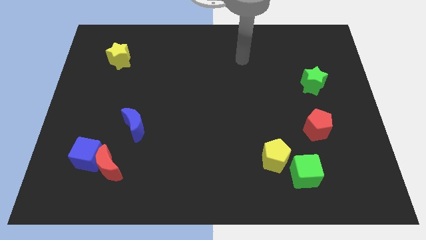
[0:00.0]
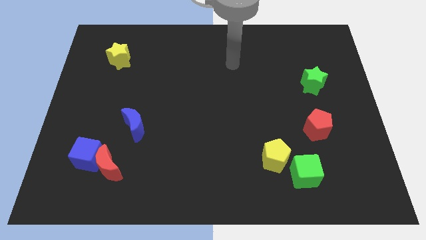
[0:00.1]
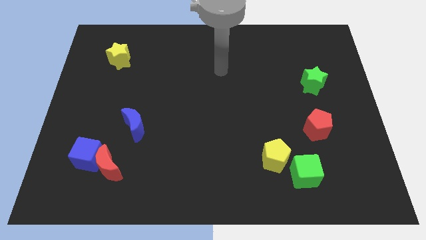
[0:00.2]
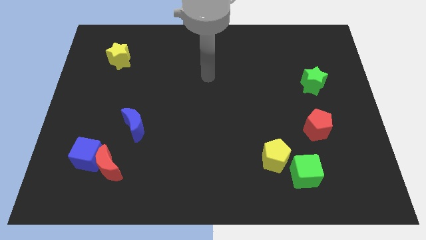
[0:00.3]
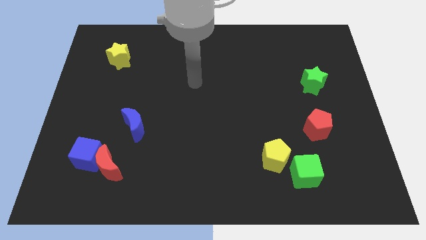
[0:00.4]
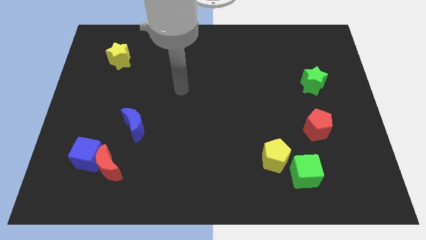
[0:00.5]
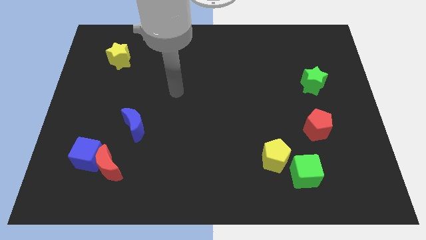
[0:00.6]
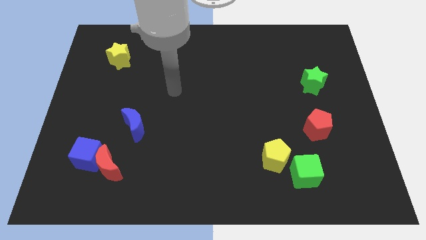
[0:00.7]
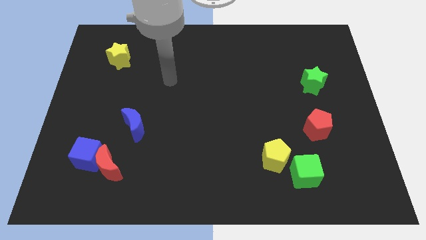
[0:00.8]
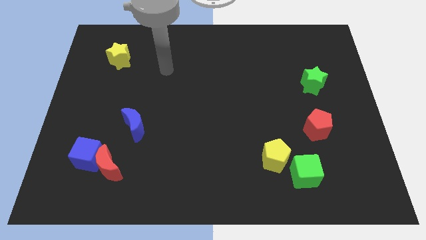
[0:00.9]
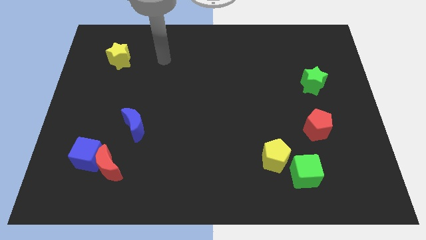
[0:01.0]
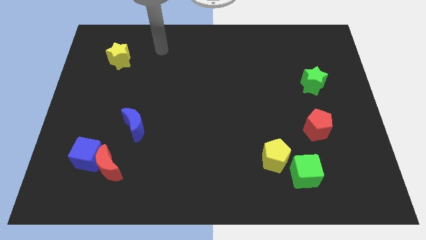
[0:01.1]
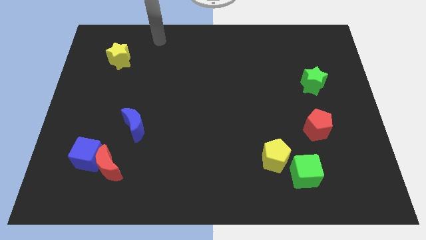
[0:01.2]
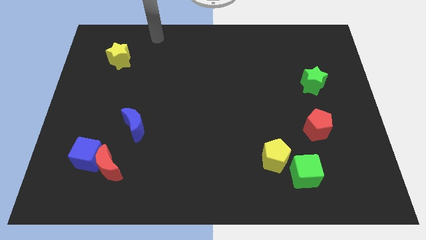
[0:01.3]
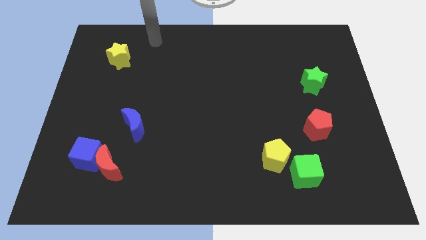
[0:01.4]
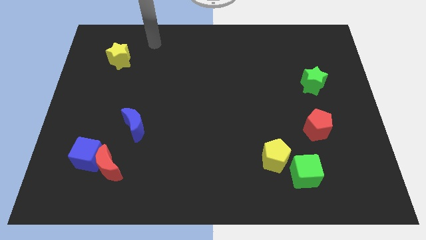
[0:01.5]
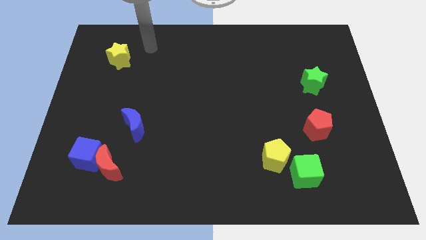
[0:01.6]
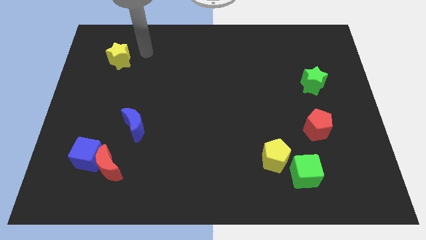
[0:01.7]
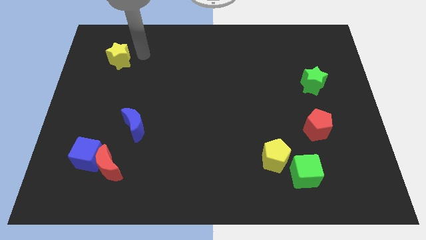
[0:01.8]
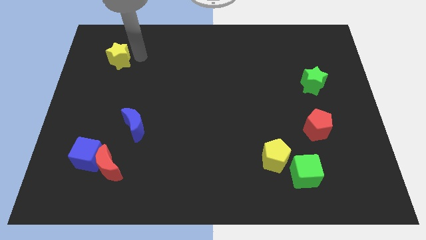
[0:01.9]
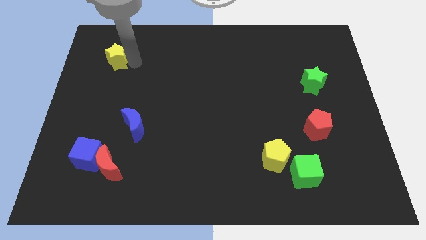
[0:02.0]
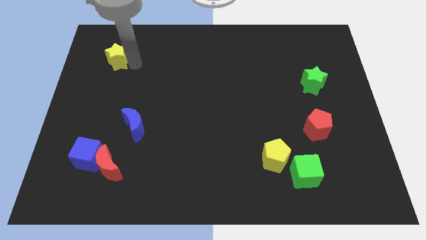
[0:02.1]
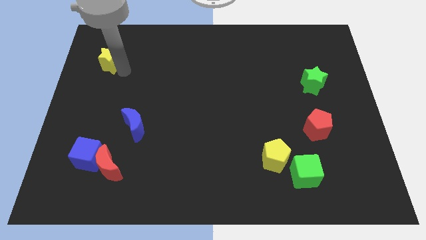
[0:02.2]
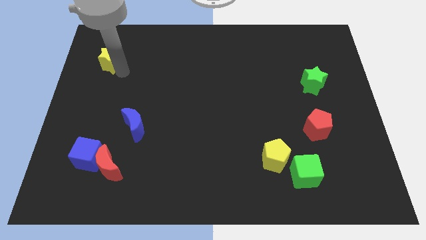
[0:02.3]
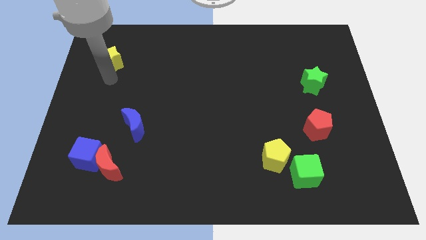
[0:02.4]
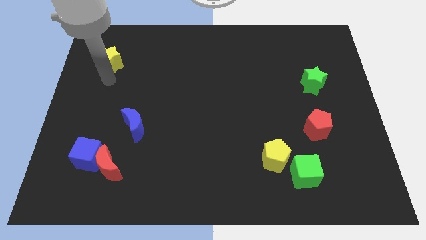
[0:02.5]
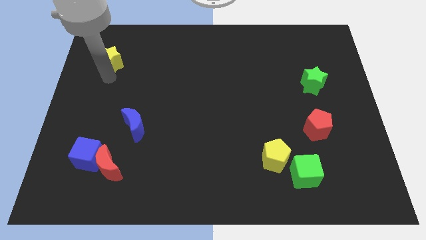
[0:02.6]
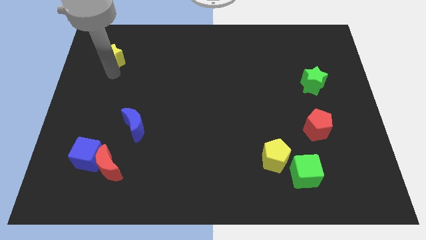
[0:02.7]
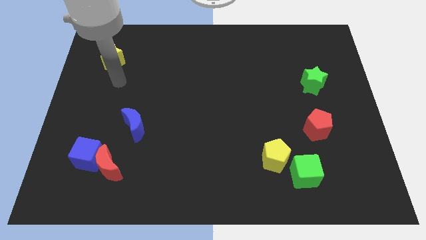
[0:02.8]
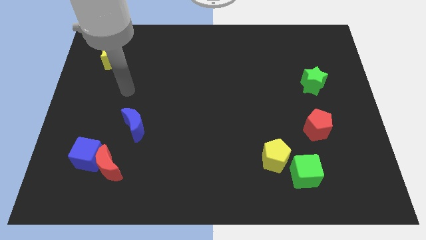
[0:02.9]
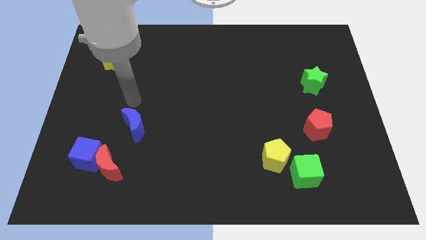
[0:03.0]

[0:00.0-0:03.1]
move the yellow star slightly to the left side

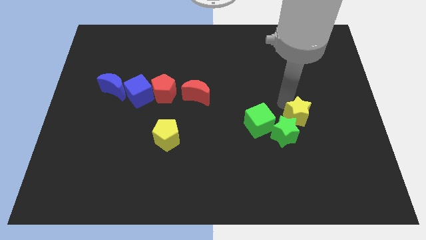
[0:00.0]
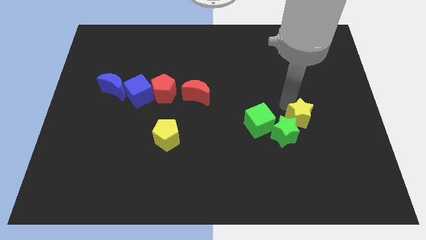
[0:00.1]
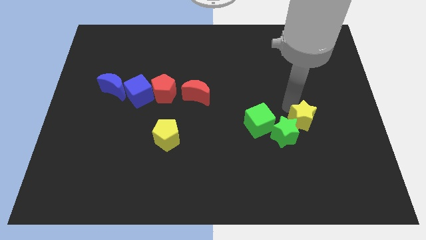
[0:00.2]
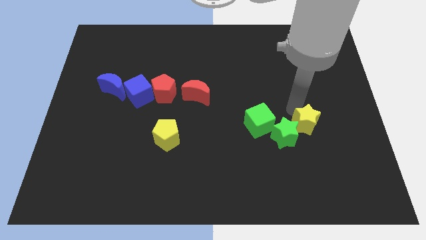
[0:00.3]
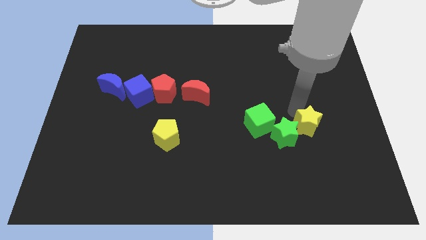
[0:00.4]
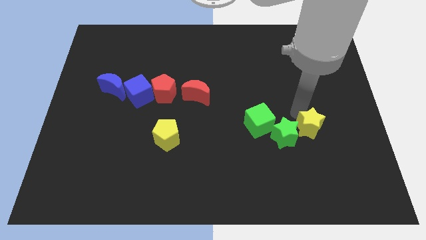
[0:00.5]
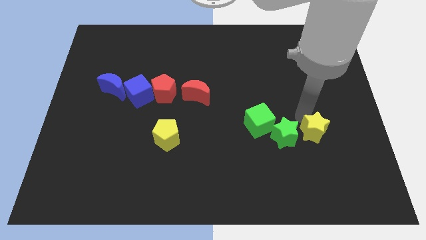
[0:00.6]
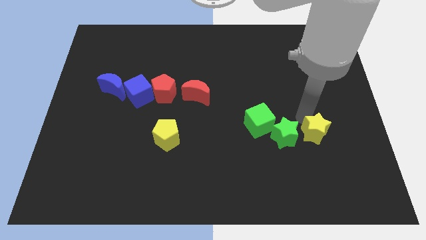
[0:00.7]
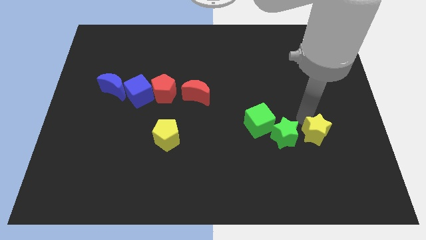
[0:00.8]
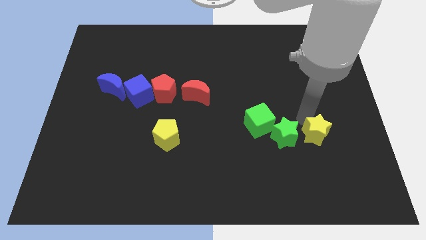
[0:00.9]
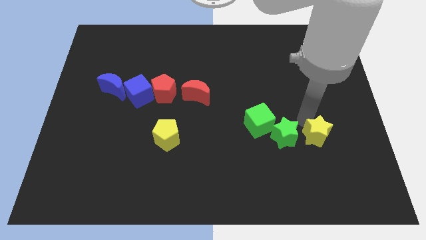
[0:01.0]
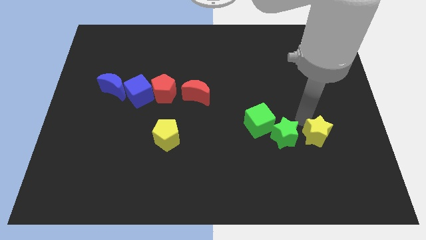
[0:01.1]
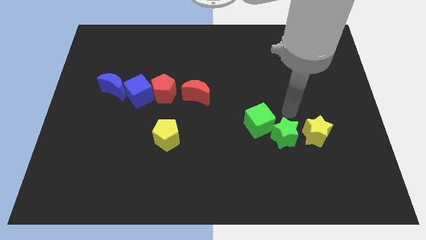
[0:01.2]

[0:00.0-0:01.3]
put yellow star parallel right to green star

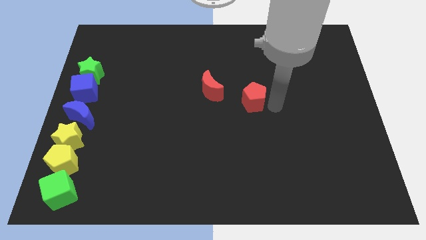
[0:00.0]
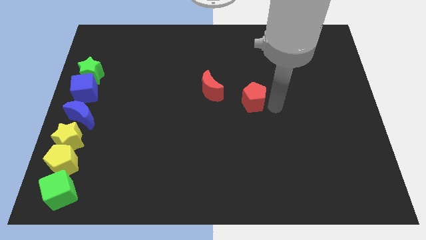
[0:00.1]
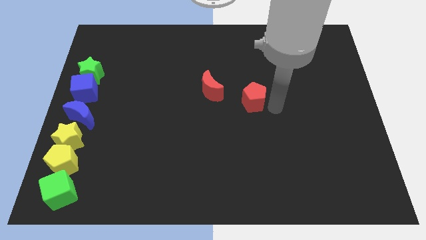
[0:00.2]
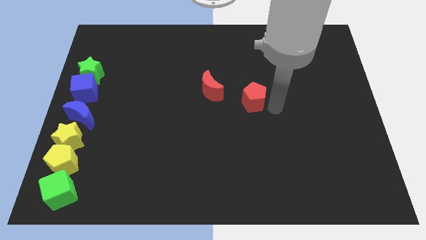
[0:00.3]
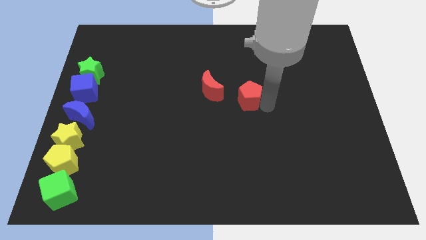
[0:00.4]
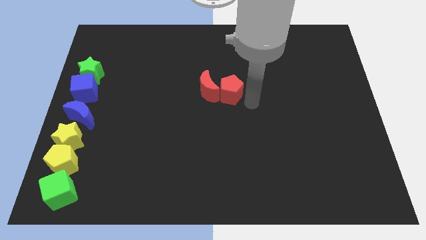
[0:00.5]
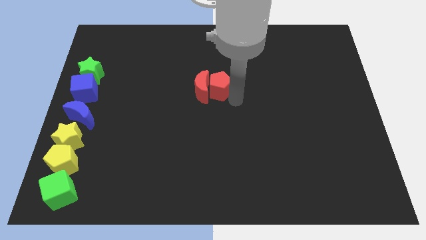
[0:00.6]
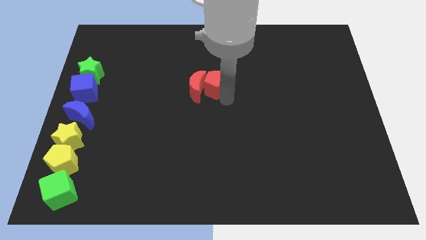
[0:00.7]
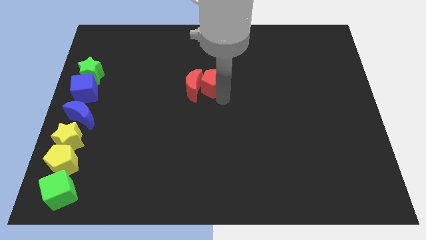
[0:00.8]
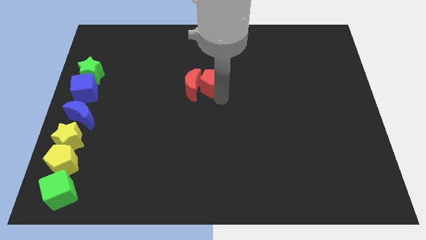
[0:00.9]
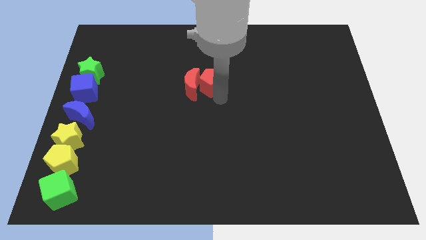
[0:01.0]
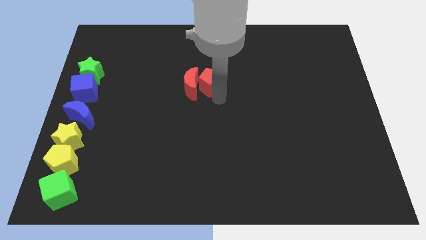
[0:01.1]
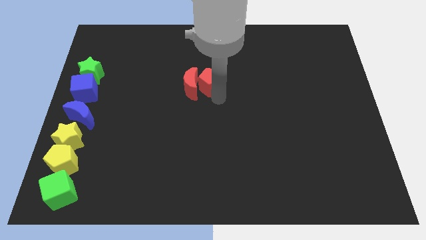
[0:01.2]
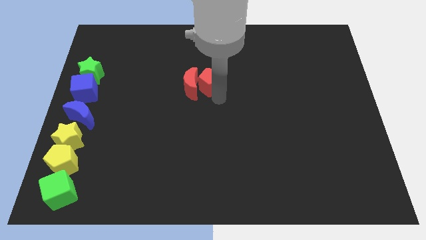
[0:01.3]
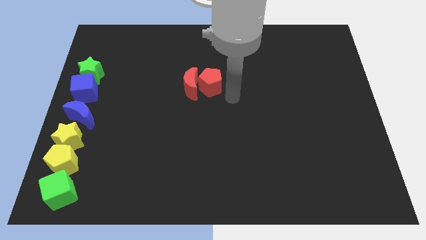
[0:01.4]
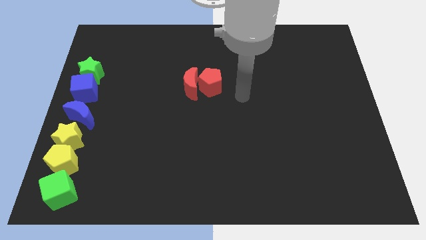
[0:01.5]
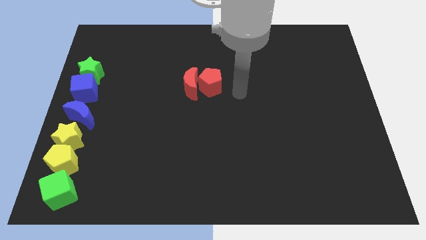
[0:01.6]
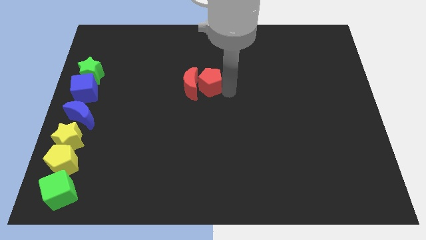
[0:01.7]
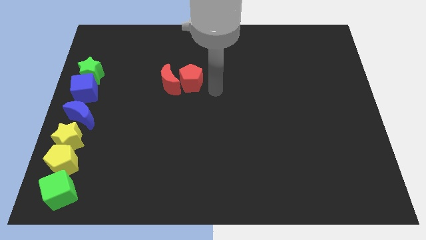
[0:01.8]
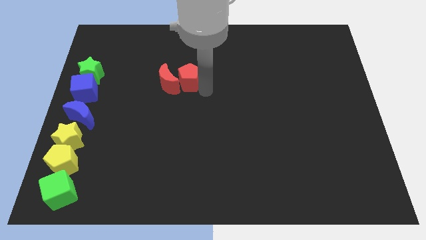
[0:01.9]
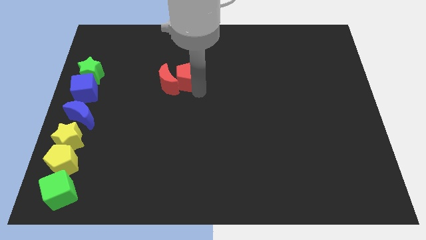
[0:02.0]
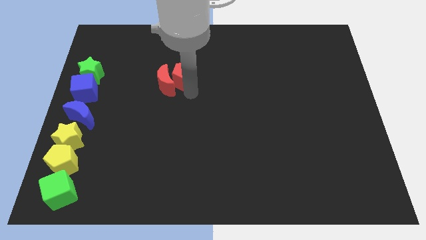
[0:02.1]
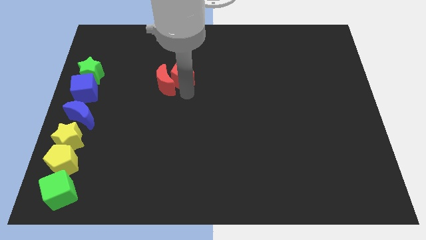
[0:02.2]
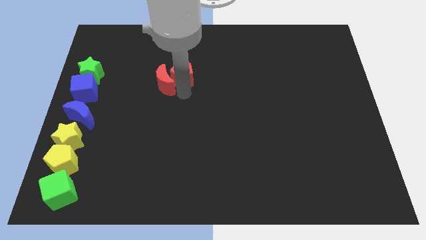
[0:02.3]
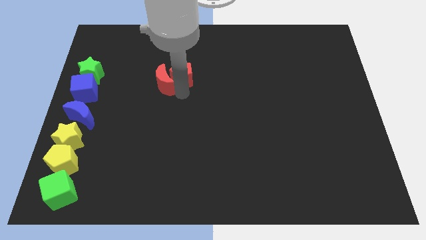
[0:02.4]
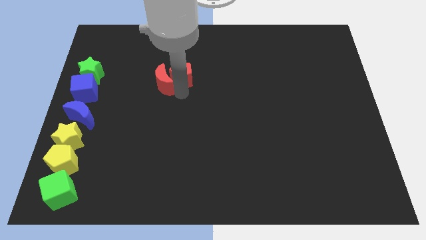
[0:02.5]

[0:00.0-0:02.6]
push red pentagon along with red crescent to left side of the board

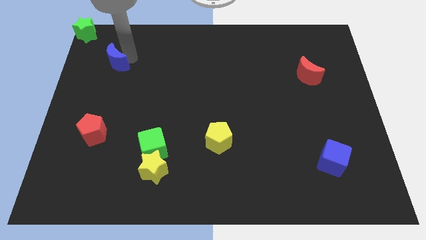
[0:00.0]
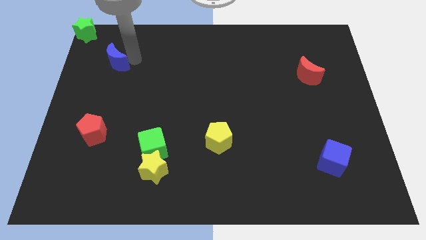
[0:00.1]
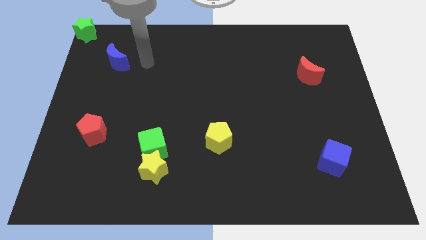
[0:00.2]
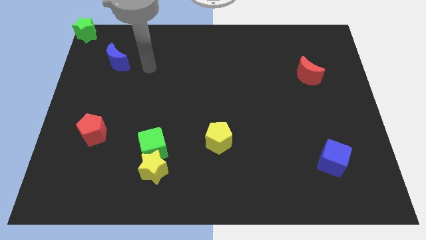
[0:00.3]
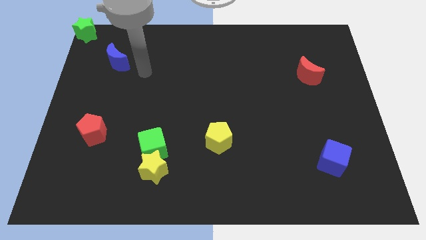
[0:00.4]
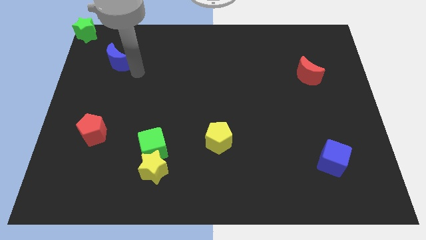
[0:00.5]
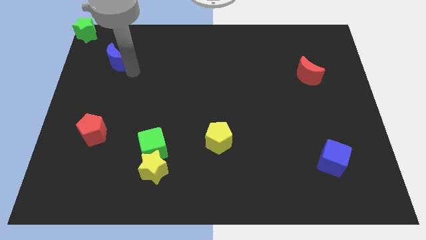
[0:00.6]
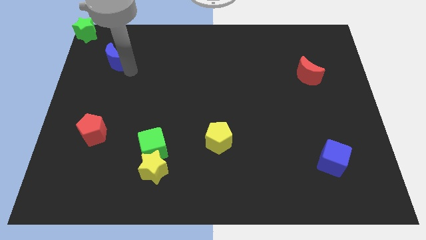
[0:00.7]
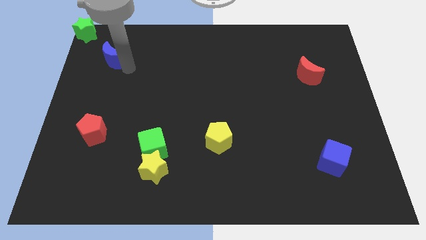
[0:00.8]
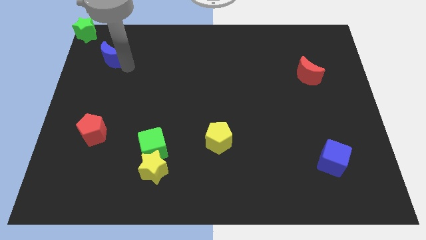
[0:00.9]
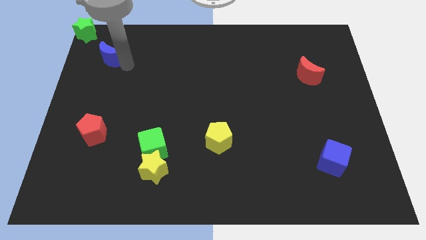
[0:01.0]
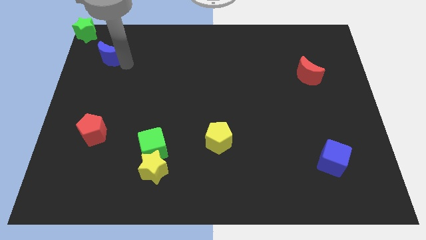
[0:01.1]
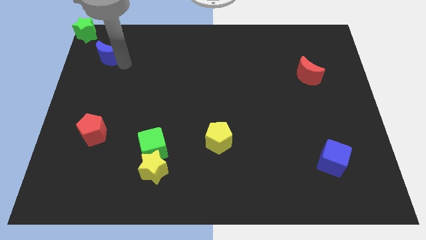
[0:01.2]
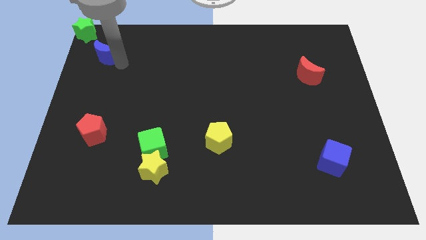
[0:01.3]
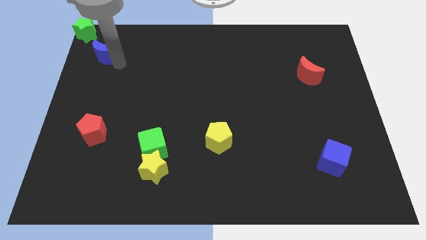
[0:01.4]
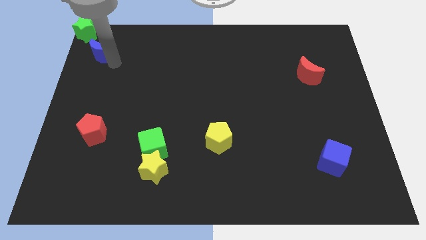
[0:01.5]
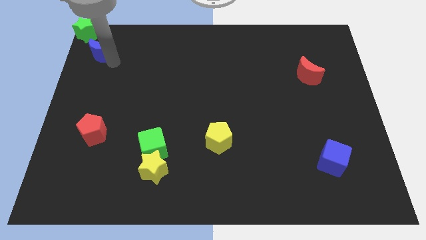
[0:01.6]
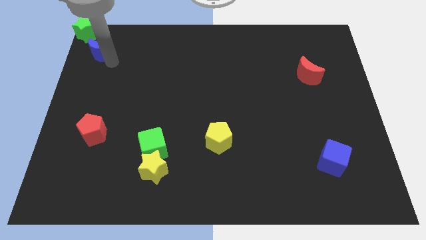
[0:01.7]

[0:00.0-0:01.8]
place the blue moon diagonally right to green star
